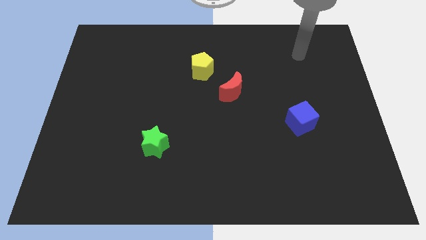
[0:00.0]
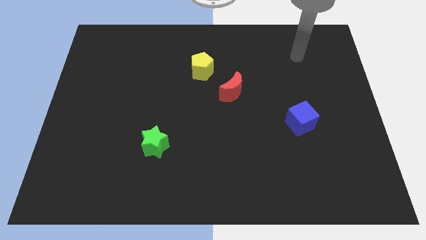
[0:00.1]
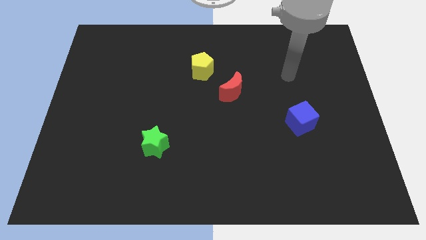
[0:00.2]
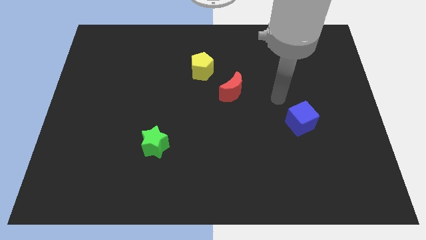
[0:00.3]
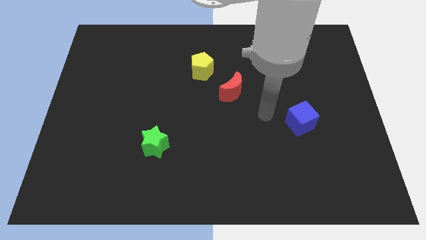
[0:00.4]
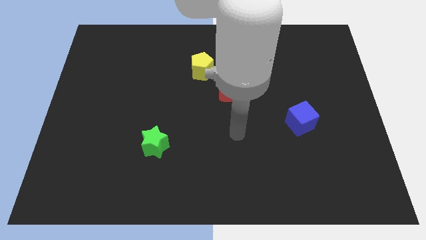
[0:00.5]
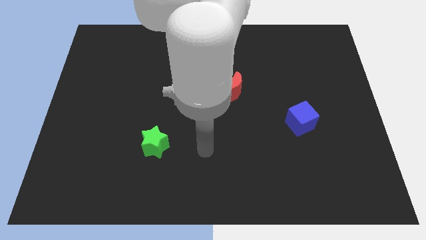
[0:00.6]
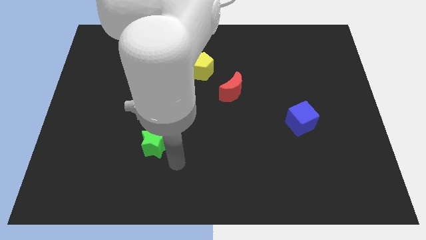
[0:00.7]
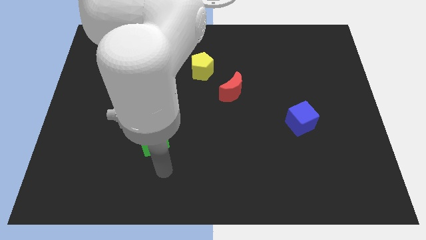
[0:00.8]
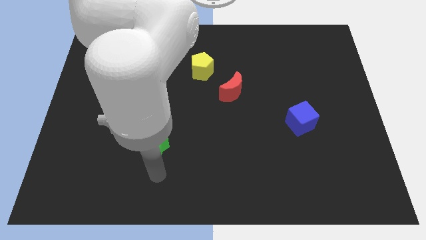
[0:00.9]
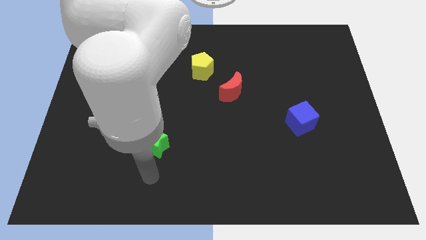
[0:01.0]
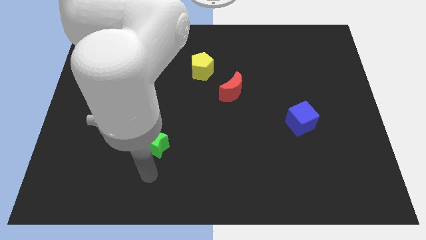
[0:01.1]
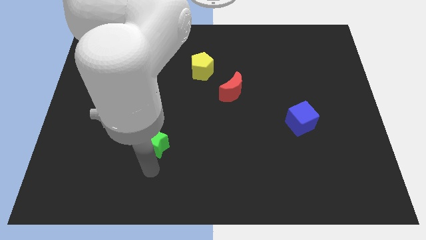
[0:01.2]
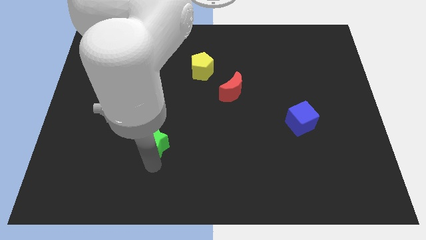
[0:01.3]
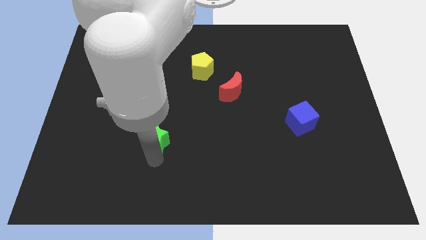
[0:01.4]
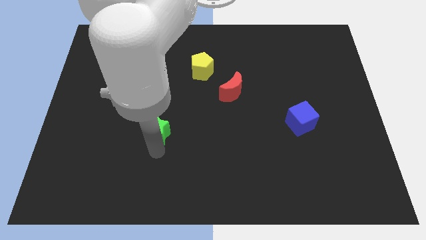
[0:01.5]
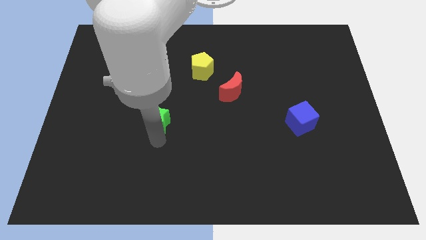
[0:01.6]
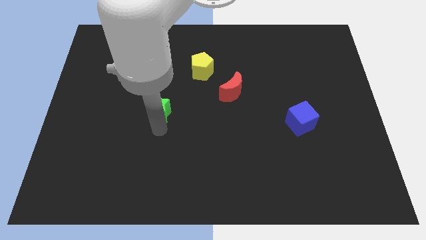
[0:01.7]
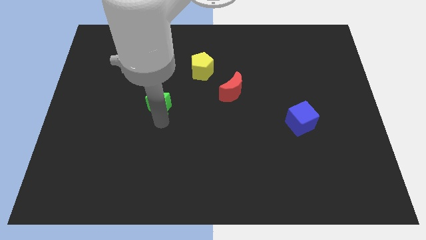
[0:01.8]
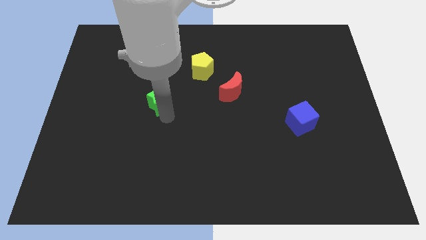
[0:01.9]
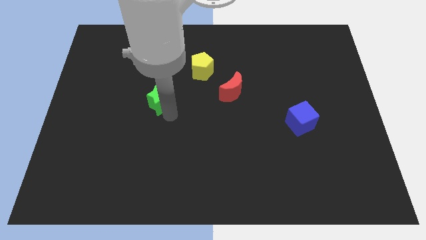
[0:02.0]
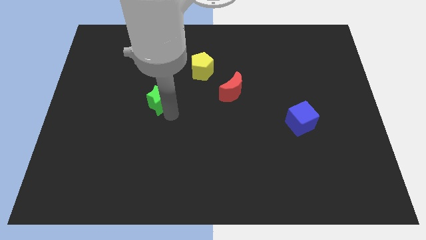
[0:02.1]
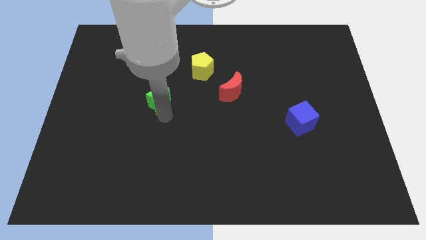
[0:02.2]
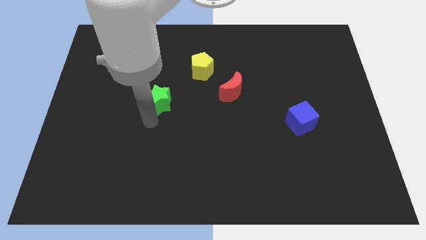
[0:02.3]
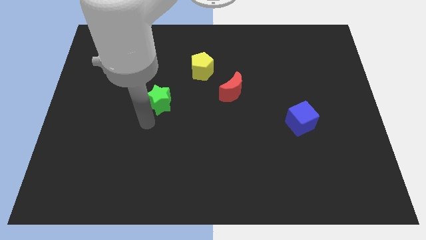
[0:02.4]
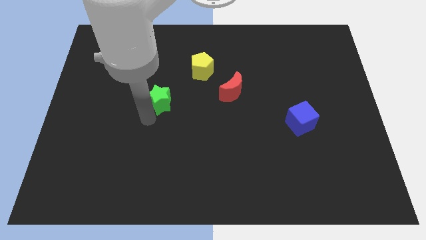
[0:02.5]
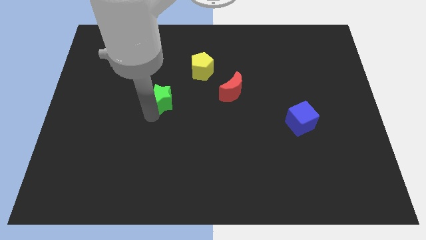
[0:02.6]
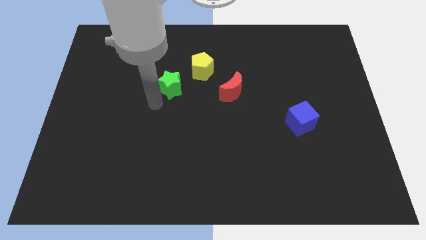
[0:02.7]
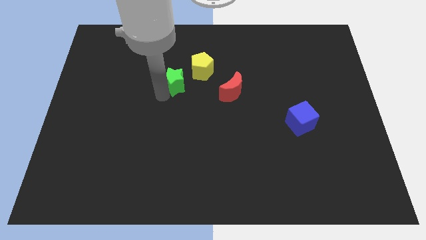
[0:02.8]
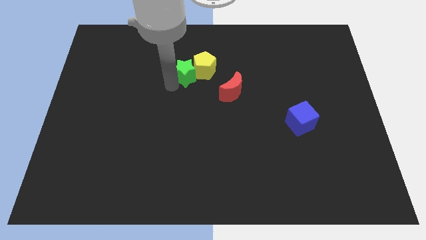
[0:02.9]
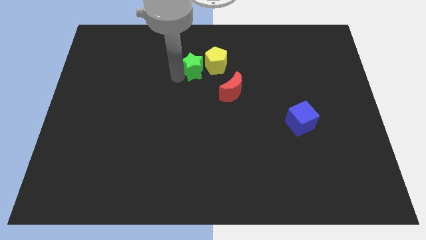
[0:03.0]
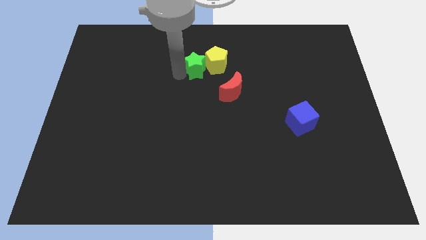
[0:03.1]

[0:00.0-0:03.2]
move the green block to the pentagon

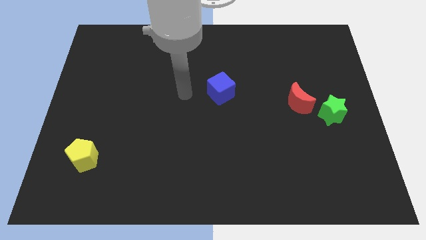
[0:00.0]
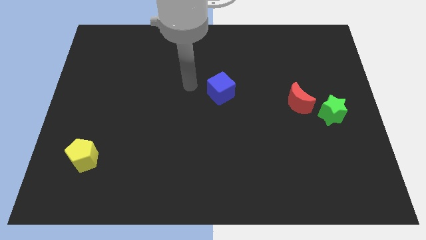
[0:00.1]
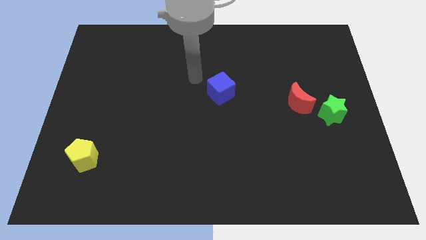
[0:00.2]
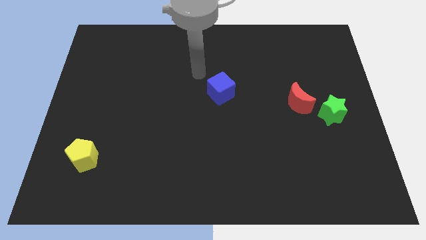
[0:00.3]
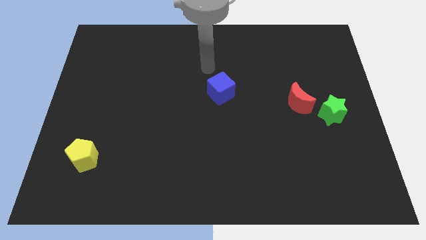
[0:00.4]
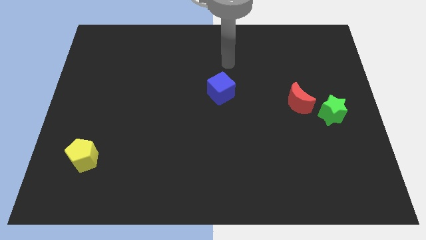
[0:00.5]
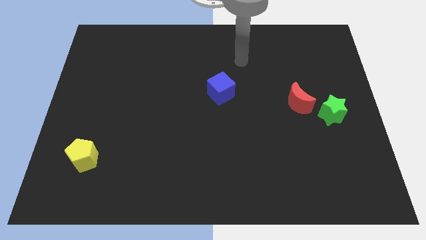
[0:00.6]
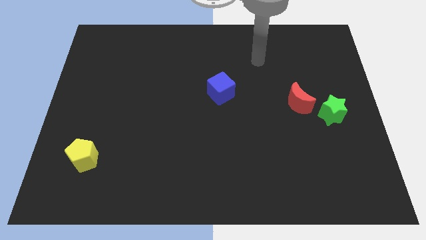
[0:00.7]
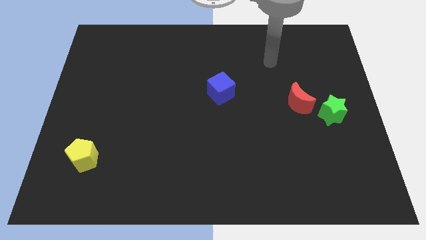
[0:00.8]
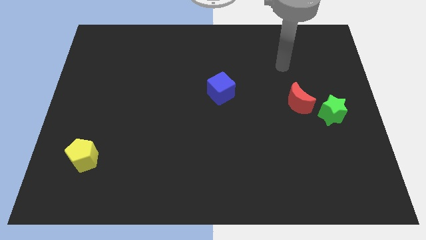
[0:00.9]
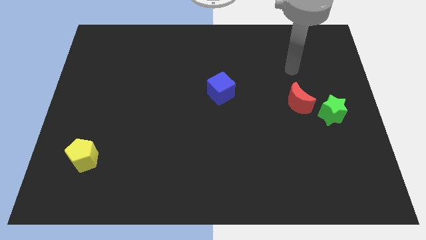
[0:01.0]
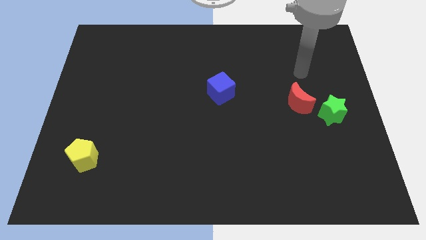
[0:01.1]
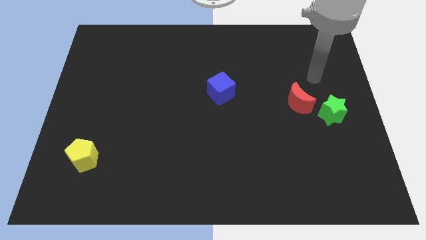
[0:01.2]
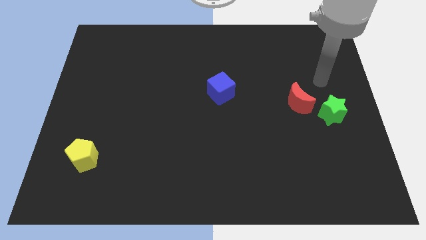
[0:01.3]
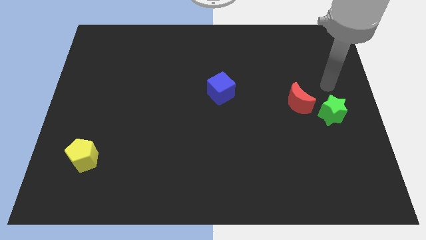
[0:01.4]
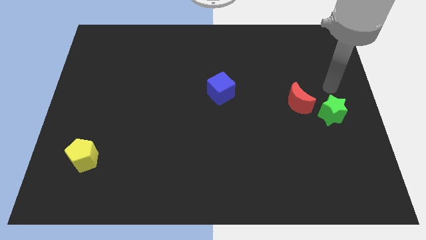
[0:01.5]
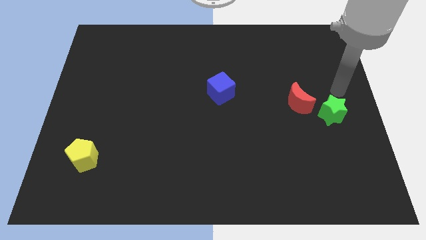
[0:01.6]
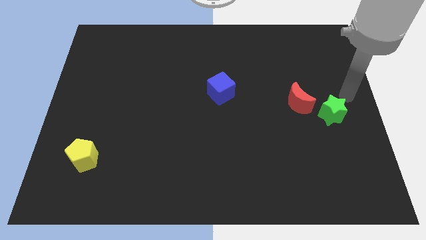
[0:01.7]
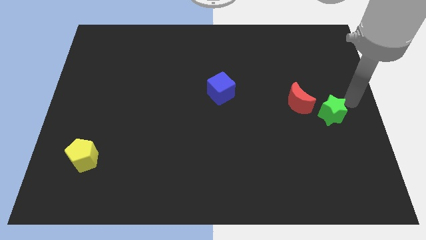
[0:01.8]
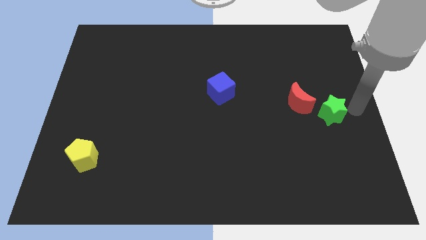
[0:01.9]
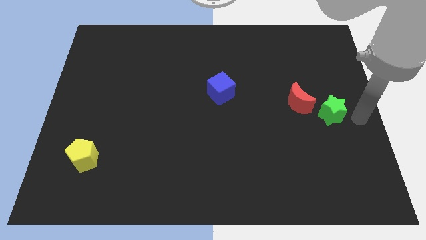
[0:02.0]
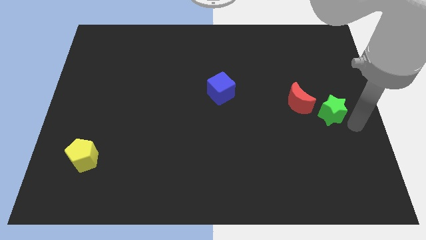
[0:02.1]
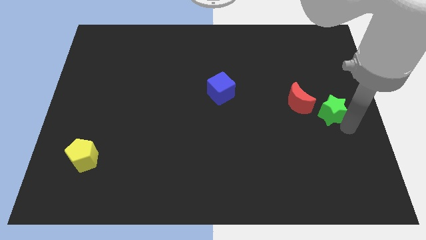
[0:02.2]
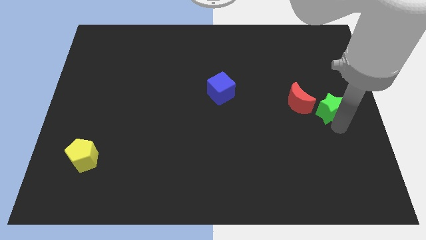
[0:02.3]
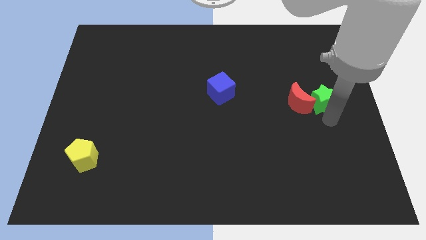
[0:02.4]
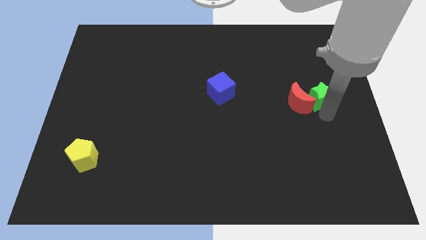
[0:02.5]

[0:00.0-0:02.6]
push the green star to the red block

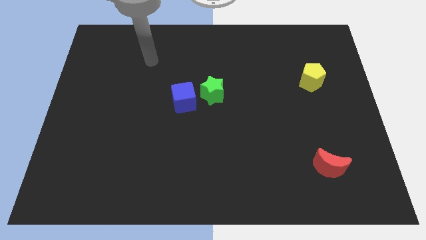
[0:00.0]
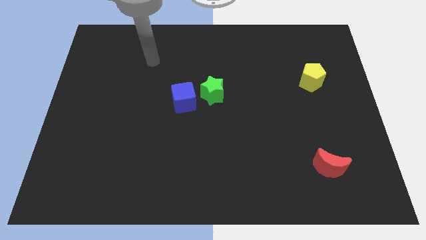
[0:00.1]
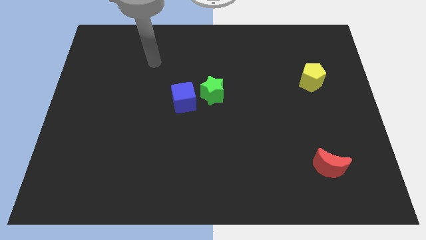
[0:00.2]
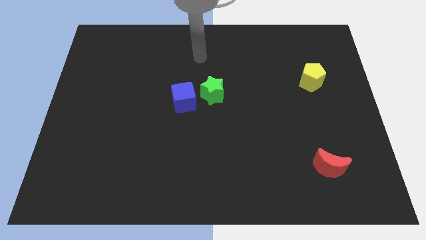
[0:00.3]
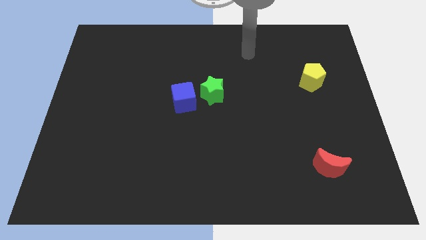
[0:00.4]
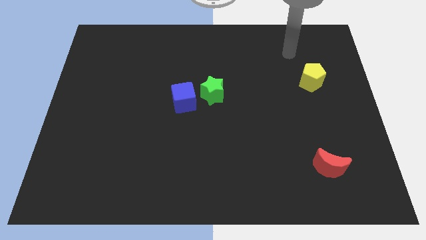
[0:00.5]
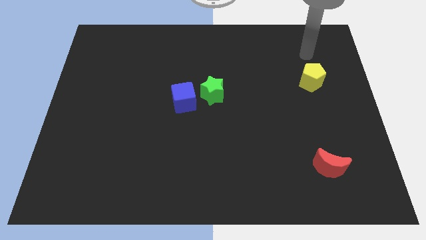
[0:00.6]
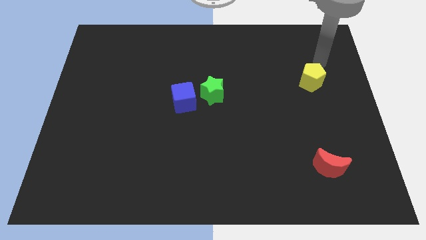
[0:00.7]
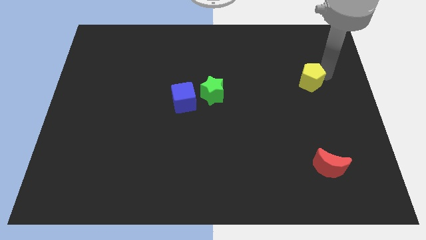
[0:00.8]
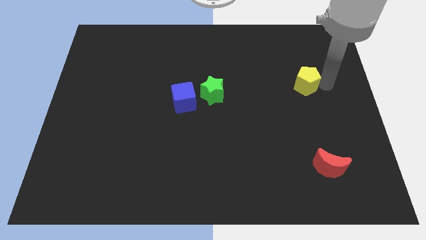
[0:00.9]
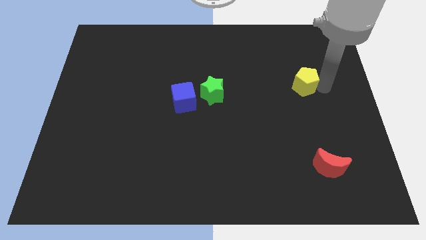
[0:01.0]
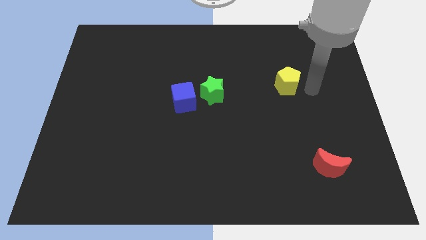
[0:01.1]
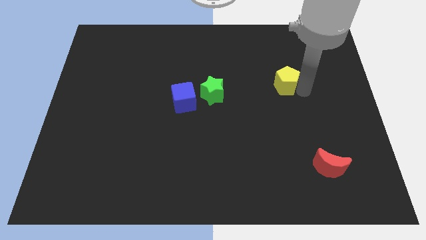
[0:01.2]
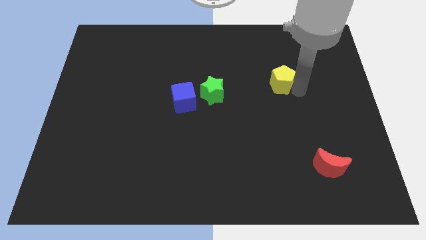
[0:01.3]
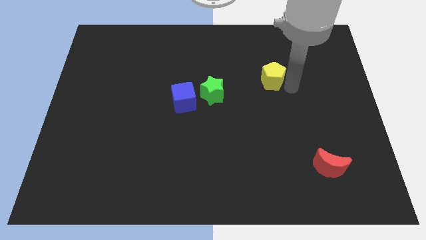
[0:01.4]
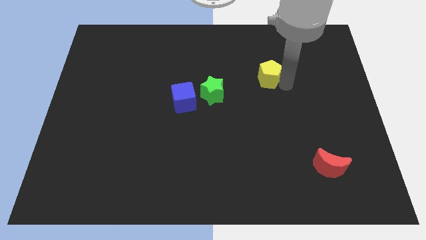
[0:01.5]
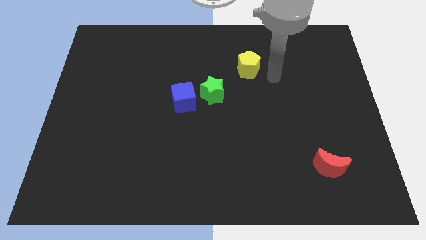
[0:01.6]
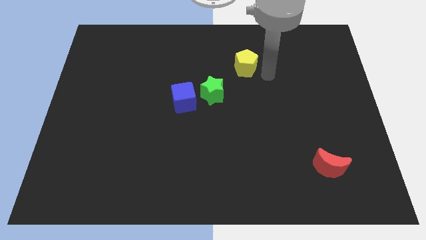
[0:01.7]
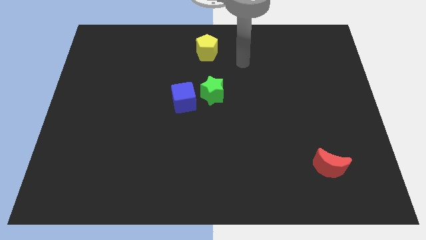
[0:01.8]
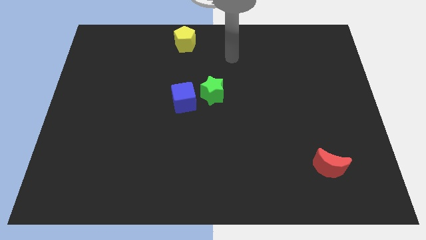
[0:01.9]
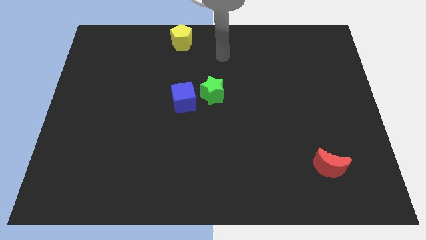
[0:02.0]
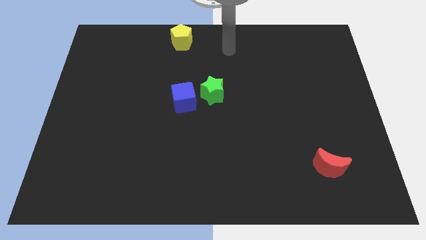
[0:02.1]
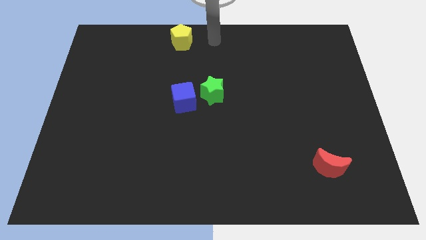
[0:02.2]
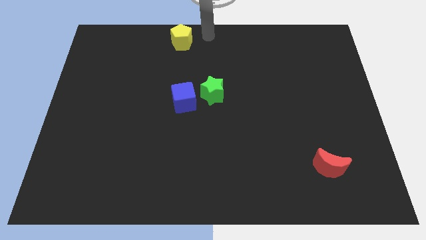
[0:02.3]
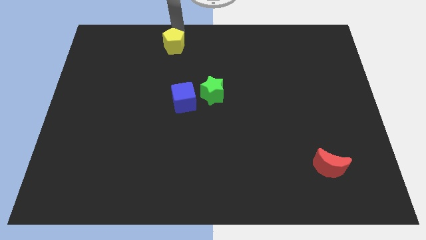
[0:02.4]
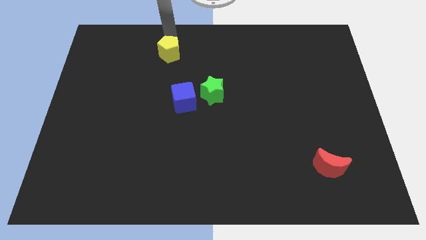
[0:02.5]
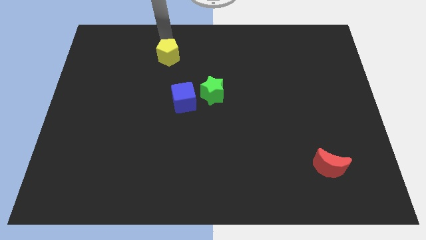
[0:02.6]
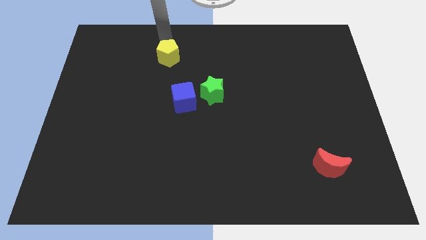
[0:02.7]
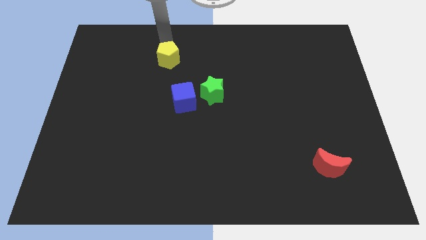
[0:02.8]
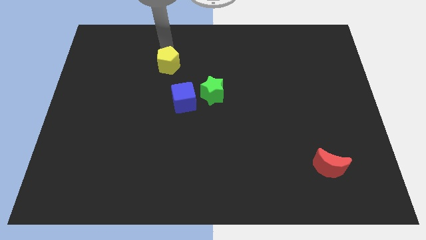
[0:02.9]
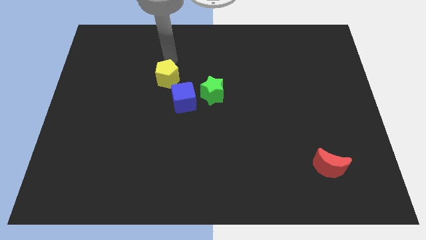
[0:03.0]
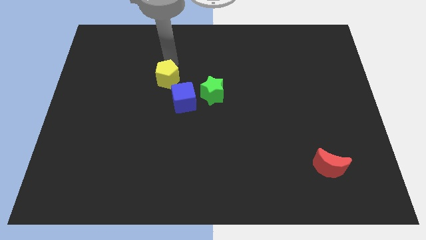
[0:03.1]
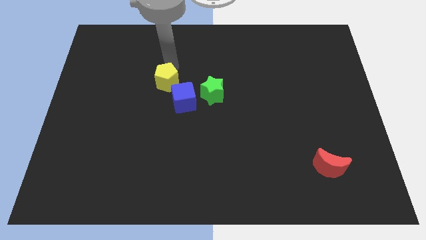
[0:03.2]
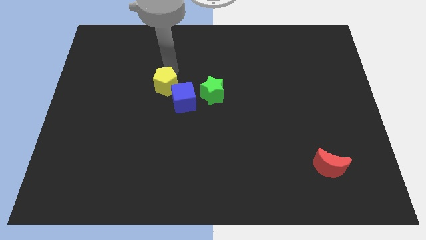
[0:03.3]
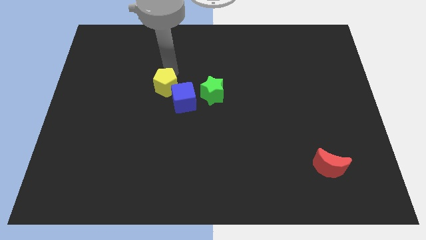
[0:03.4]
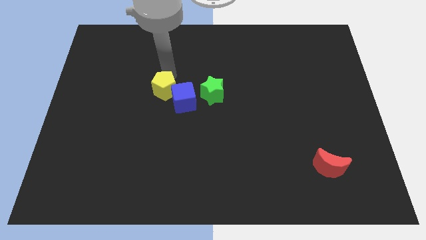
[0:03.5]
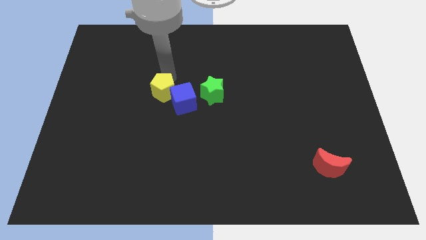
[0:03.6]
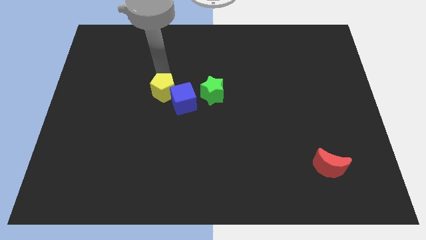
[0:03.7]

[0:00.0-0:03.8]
slide the yellow block to the blue block
